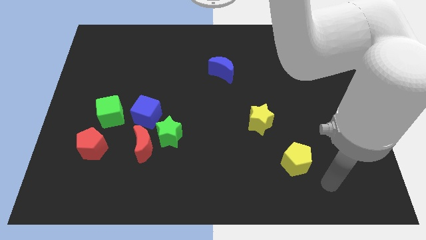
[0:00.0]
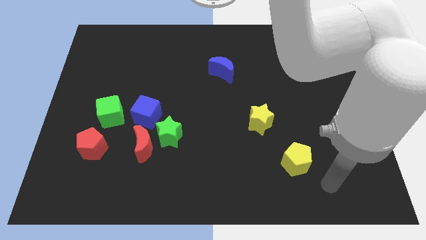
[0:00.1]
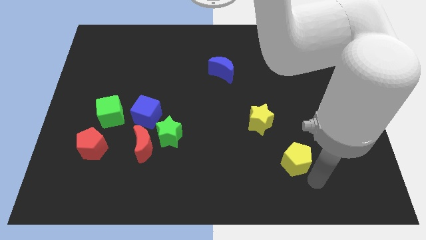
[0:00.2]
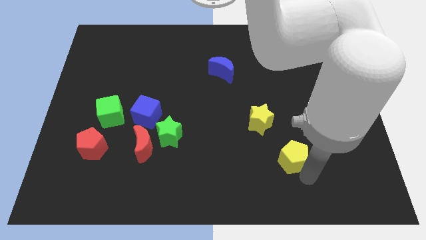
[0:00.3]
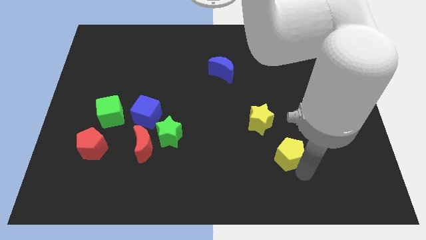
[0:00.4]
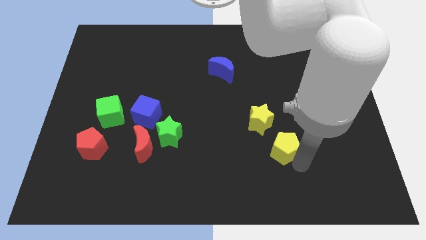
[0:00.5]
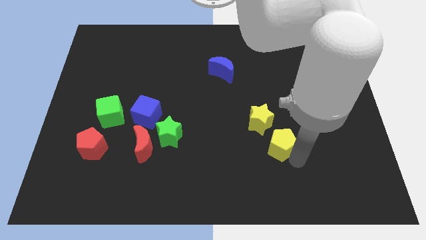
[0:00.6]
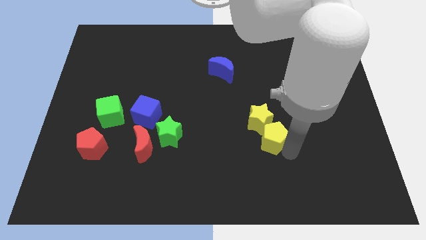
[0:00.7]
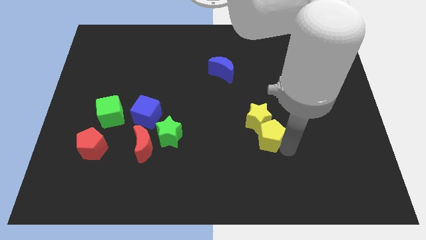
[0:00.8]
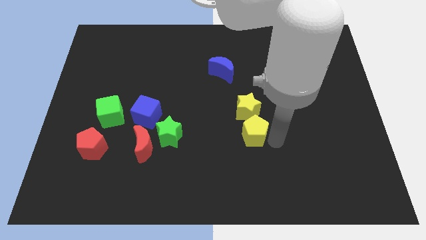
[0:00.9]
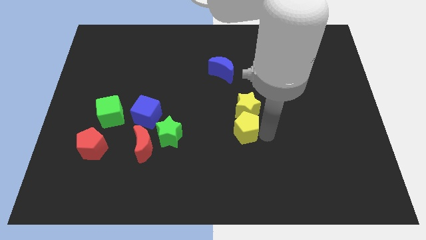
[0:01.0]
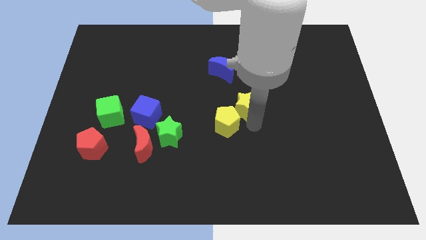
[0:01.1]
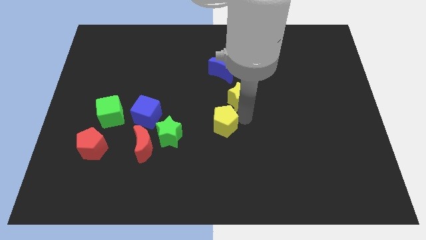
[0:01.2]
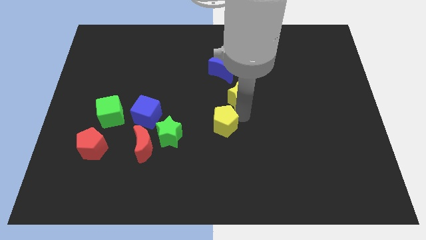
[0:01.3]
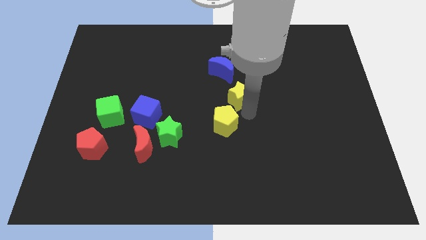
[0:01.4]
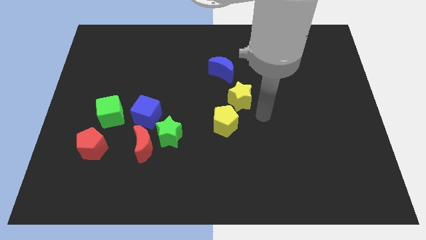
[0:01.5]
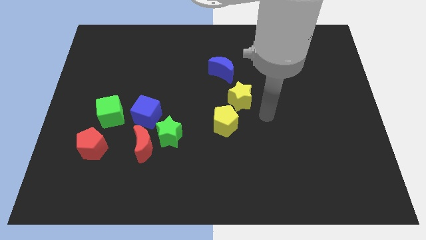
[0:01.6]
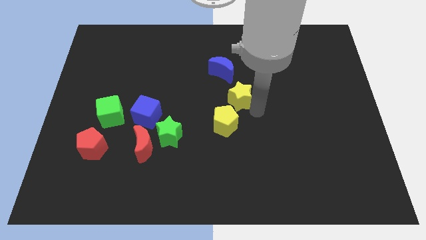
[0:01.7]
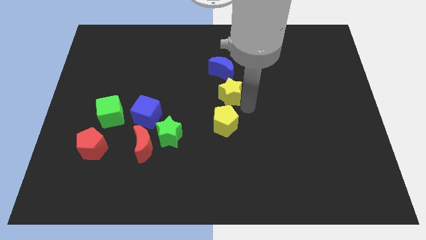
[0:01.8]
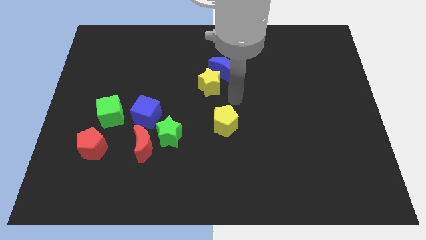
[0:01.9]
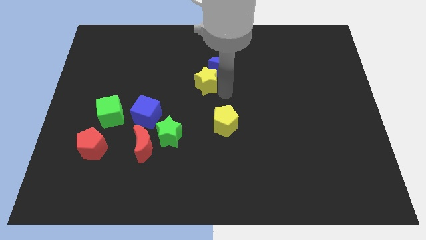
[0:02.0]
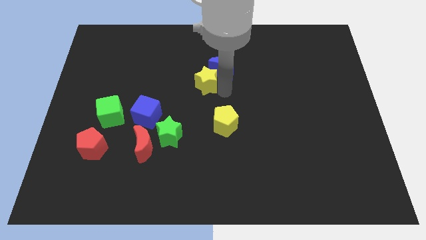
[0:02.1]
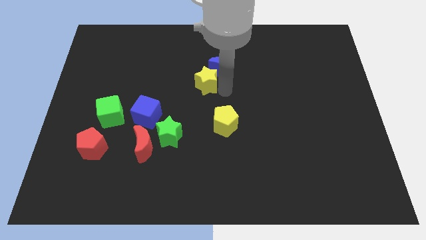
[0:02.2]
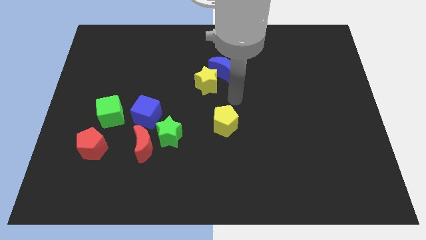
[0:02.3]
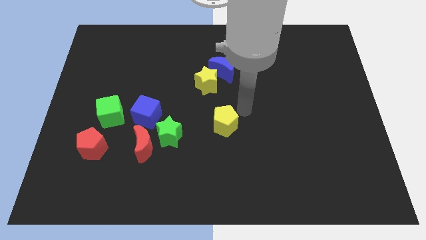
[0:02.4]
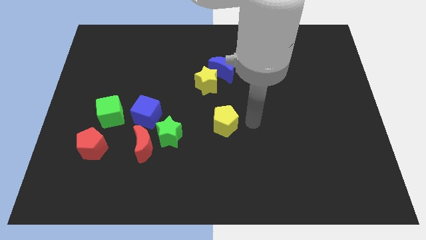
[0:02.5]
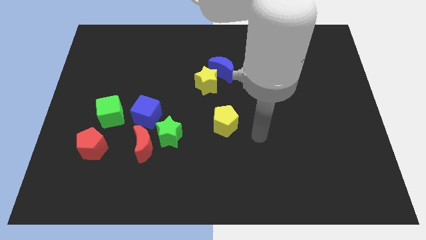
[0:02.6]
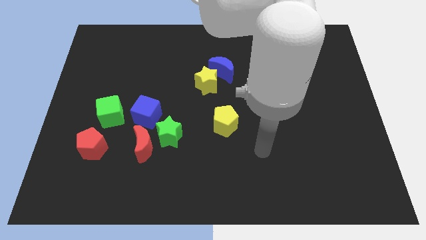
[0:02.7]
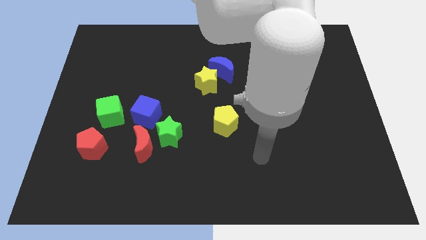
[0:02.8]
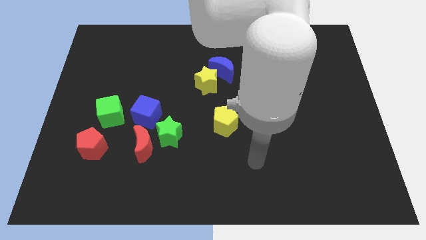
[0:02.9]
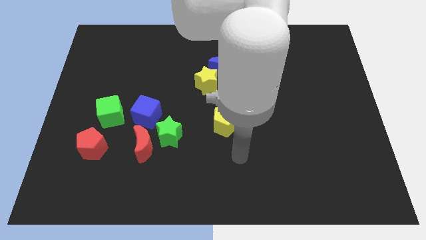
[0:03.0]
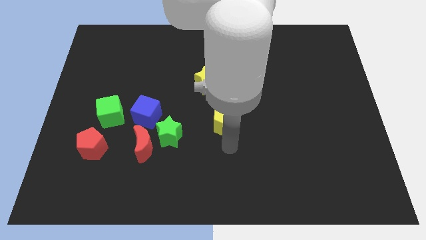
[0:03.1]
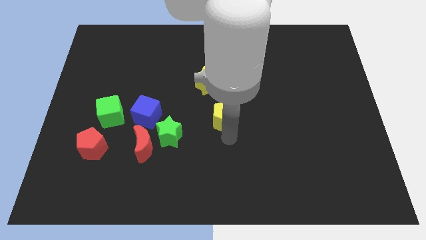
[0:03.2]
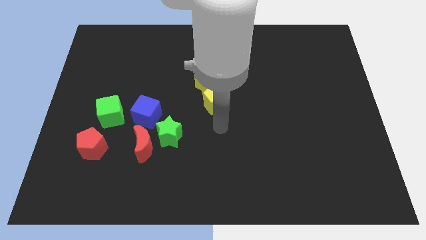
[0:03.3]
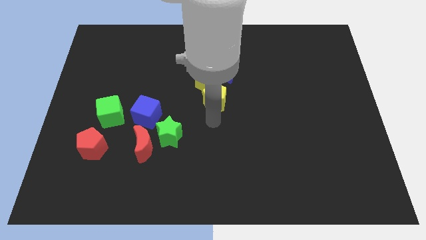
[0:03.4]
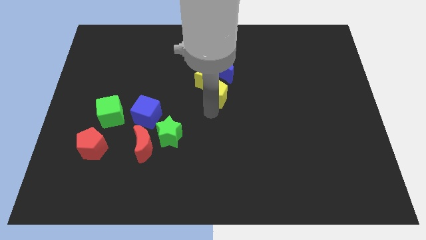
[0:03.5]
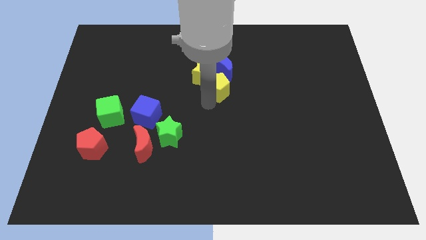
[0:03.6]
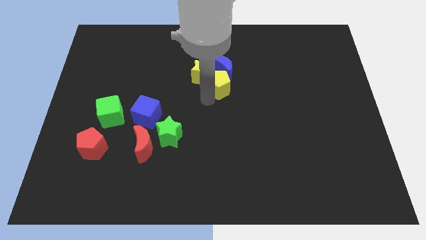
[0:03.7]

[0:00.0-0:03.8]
place the yellow star yellow pentagon into the blue moon

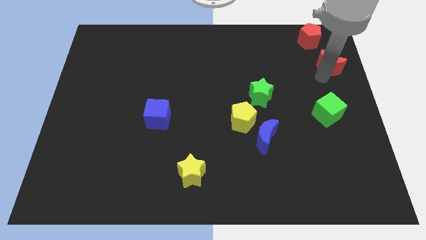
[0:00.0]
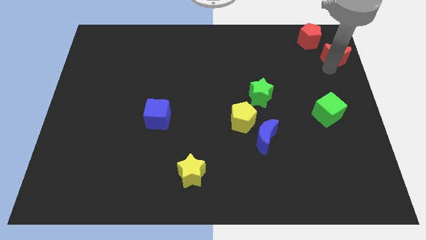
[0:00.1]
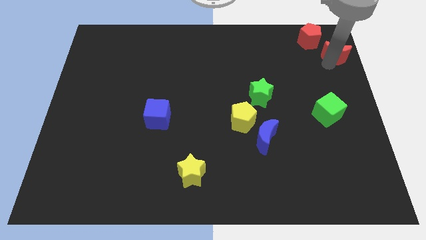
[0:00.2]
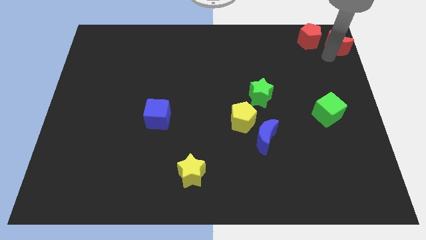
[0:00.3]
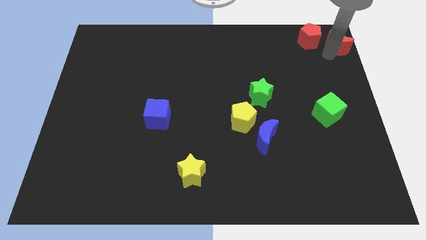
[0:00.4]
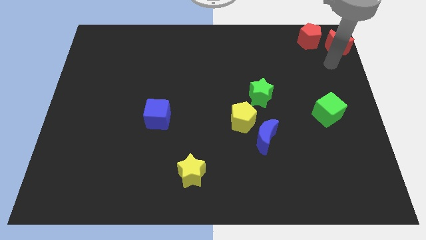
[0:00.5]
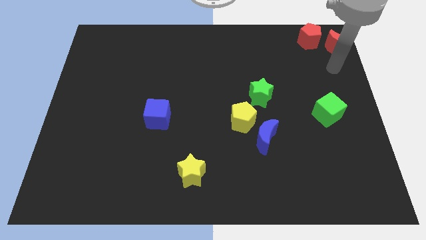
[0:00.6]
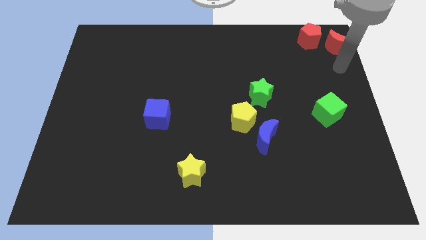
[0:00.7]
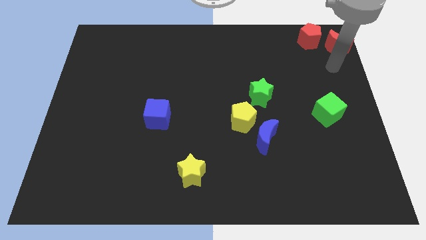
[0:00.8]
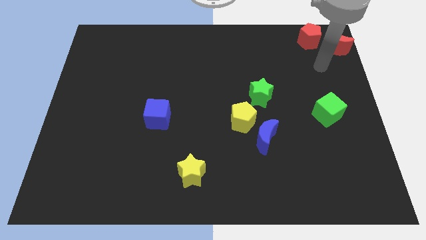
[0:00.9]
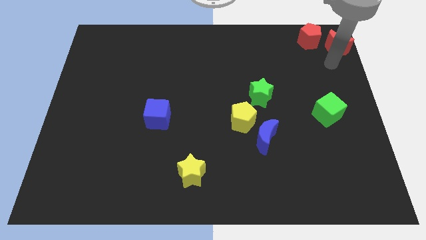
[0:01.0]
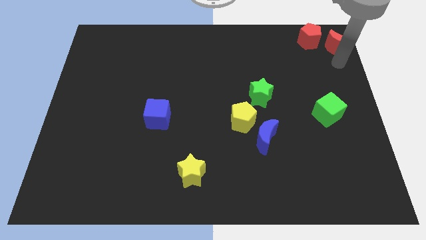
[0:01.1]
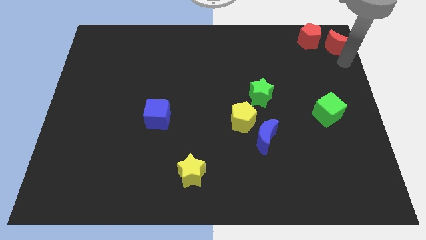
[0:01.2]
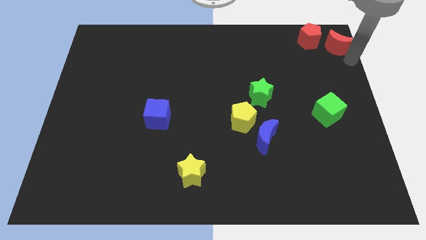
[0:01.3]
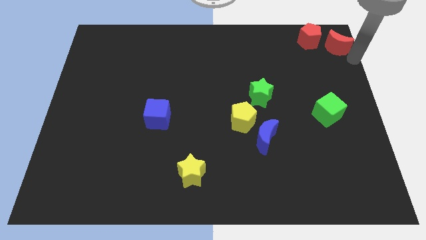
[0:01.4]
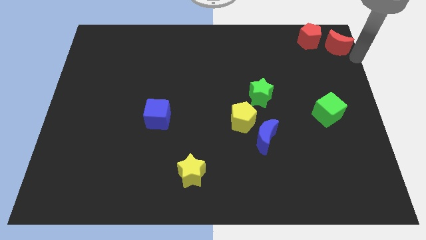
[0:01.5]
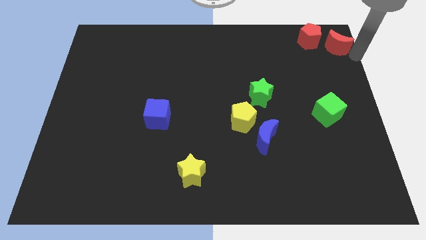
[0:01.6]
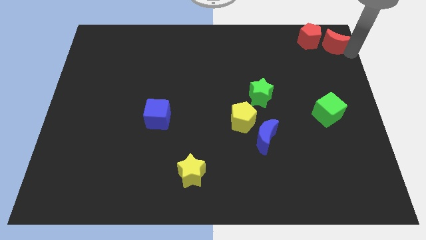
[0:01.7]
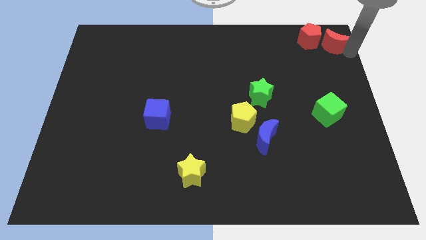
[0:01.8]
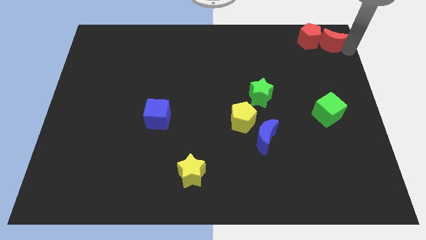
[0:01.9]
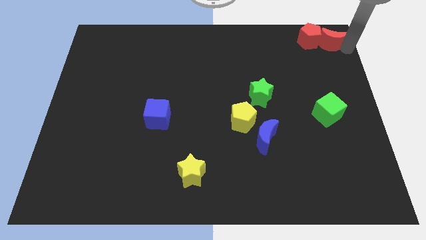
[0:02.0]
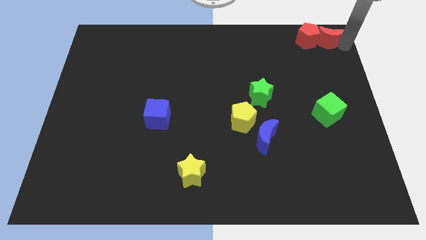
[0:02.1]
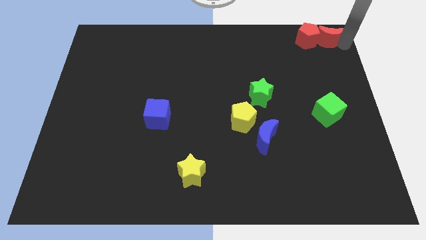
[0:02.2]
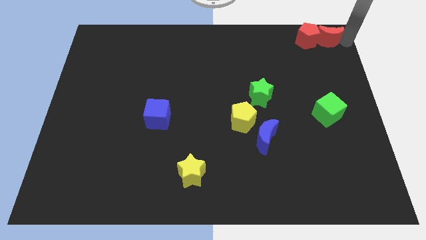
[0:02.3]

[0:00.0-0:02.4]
place the red moon to the top right corner of the board

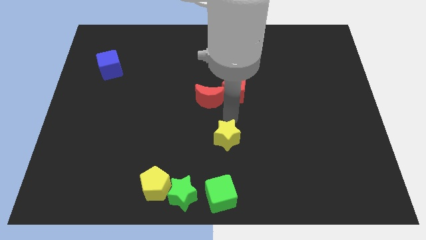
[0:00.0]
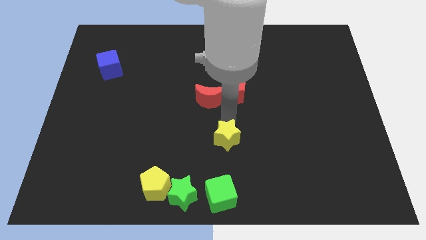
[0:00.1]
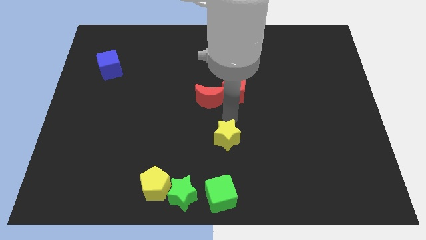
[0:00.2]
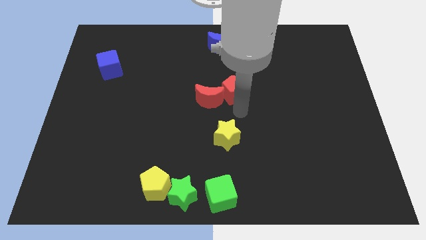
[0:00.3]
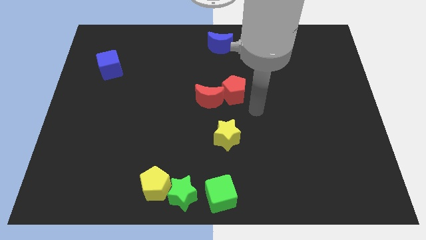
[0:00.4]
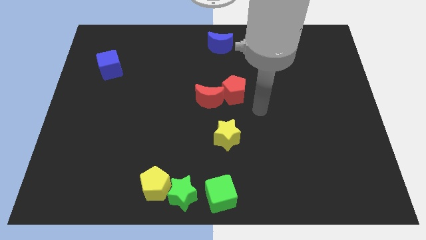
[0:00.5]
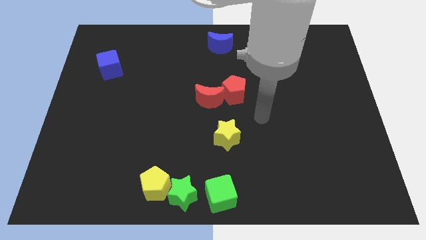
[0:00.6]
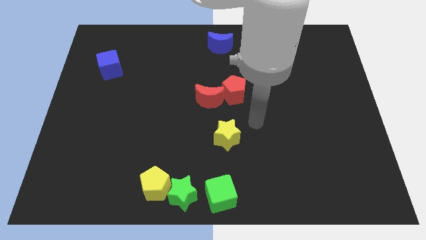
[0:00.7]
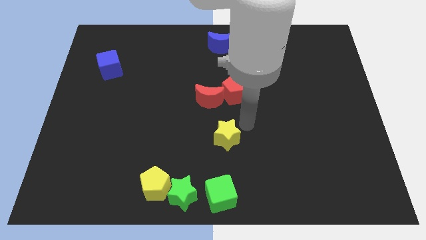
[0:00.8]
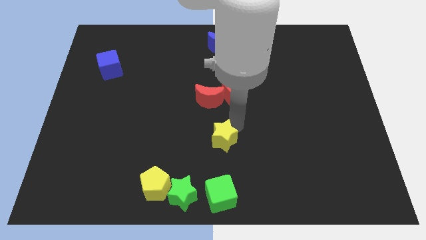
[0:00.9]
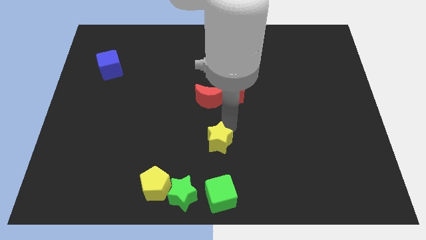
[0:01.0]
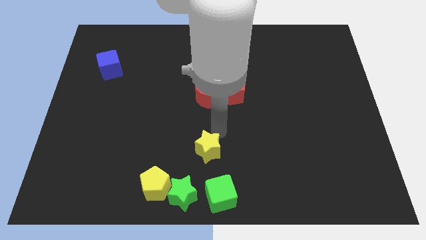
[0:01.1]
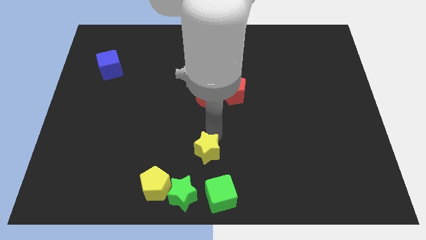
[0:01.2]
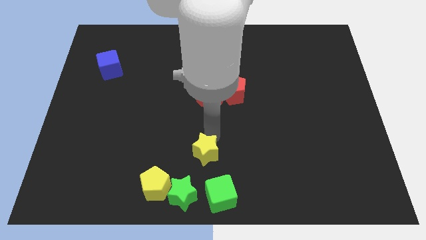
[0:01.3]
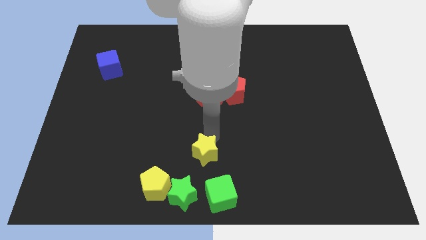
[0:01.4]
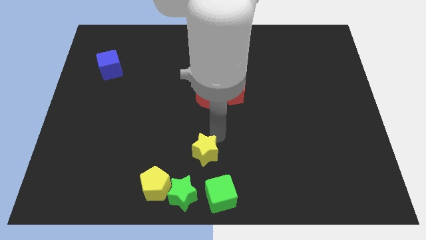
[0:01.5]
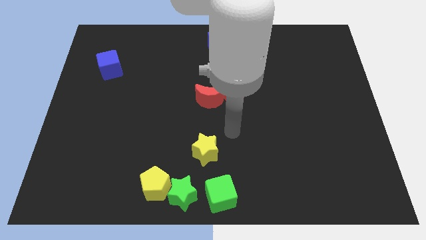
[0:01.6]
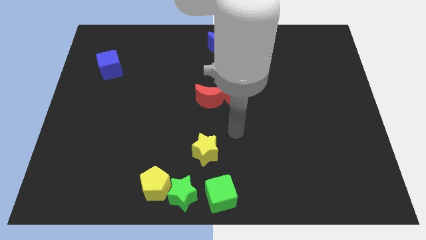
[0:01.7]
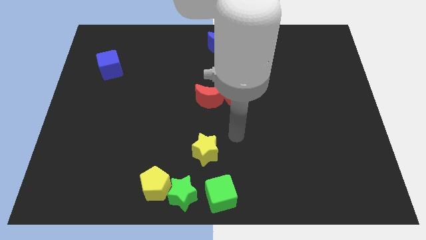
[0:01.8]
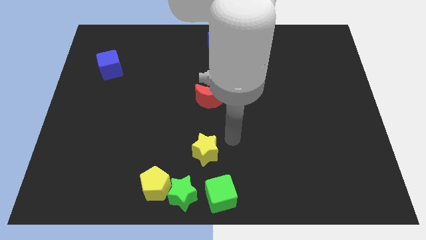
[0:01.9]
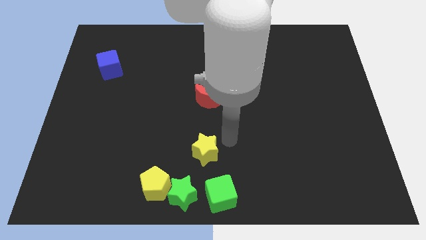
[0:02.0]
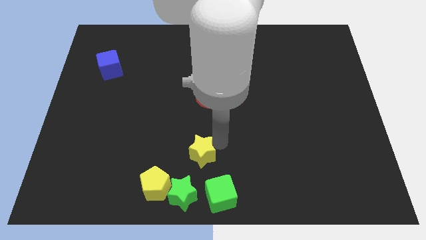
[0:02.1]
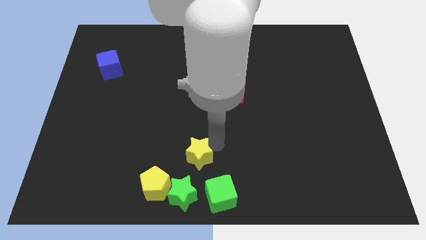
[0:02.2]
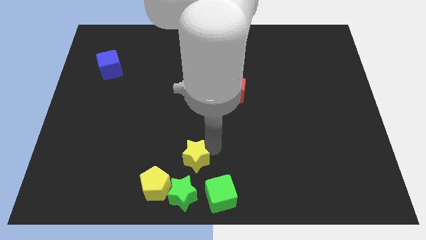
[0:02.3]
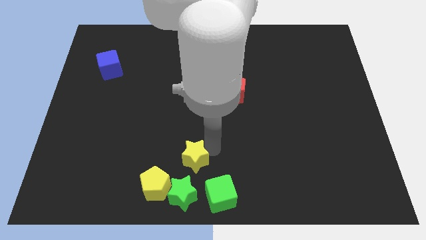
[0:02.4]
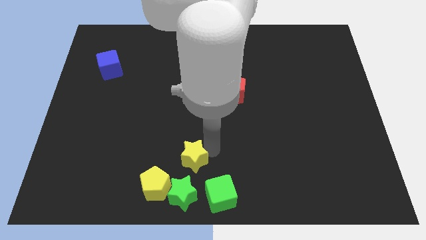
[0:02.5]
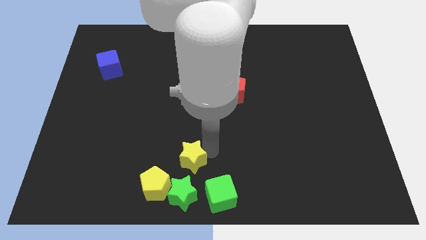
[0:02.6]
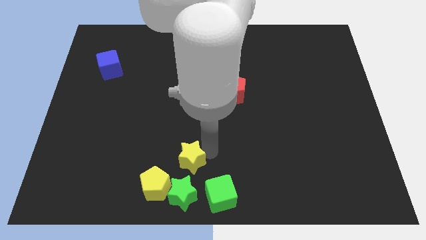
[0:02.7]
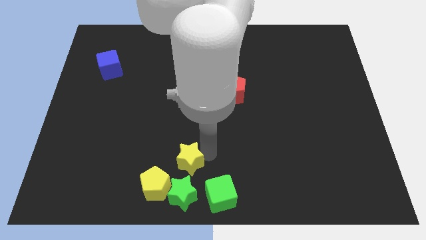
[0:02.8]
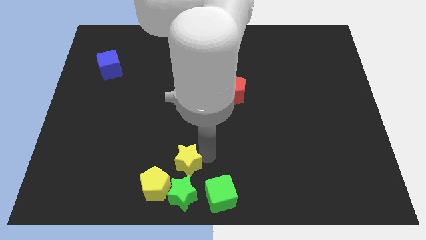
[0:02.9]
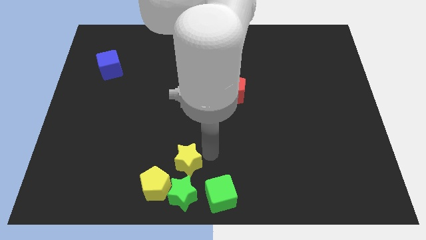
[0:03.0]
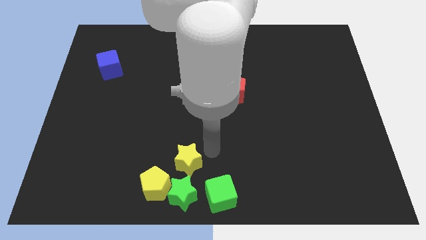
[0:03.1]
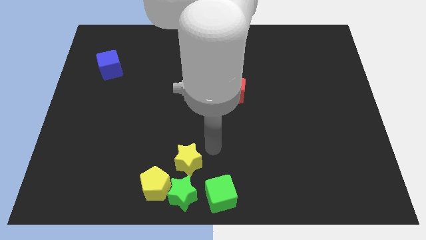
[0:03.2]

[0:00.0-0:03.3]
move the yellow star towards the top side of the green star
